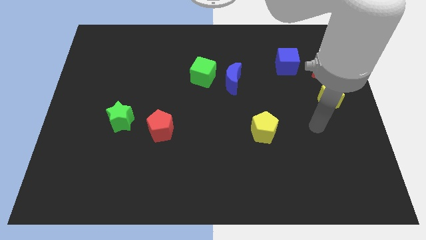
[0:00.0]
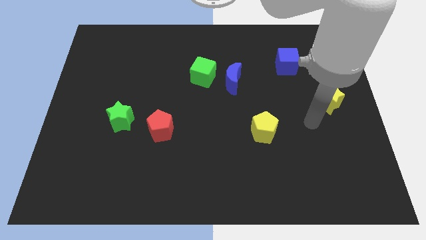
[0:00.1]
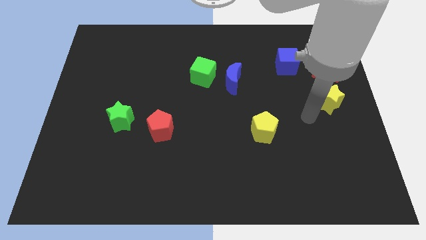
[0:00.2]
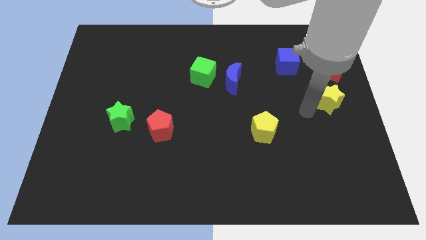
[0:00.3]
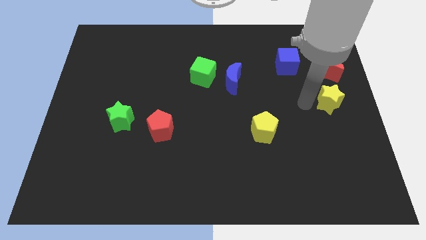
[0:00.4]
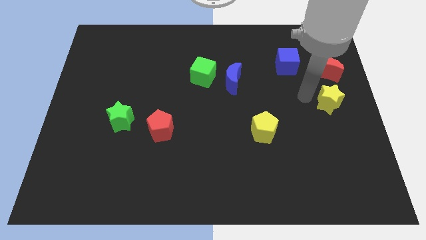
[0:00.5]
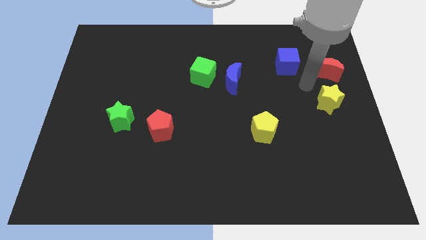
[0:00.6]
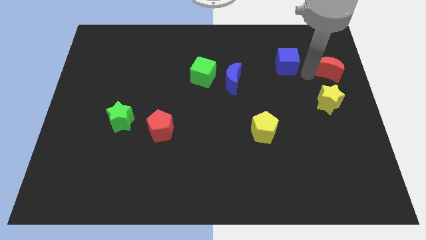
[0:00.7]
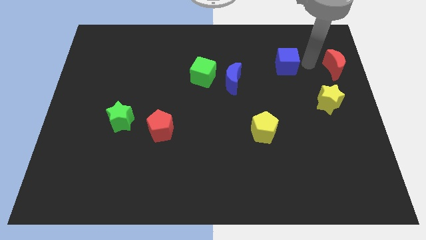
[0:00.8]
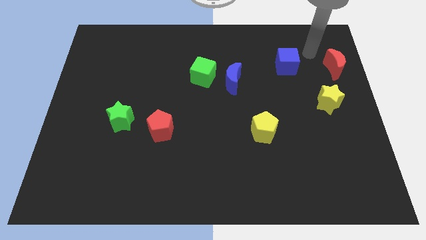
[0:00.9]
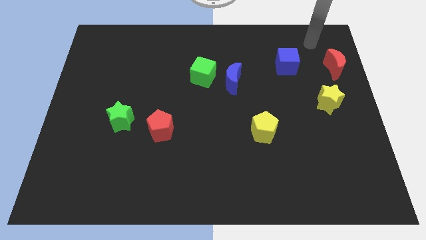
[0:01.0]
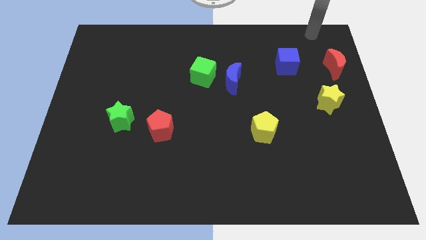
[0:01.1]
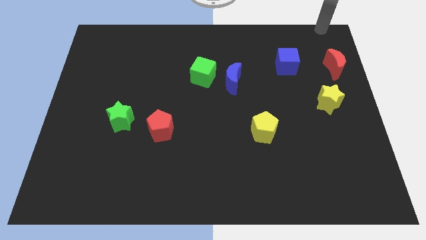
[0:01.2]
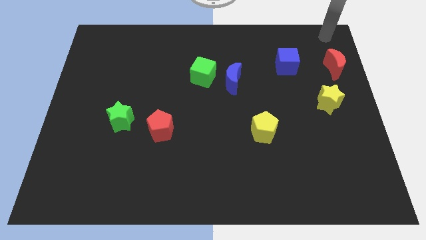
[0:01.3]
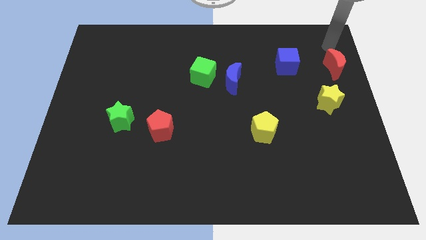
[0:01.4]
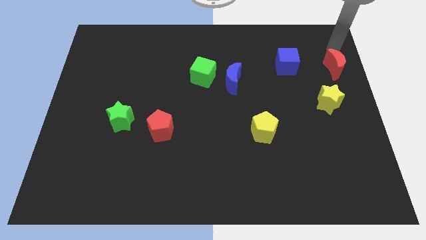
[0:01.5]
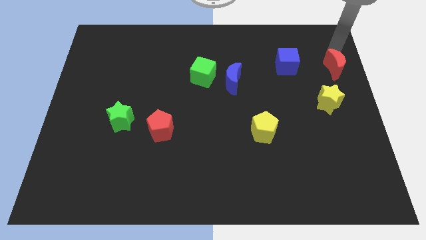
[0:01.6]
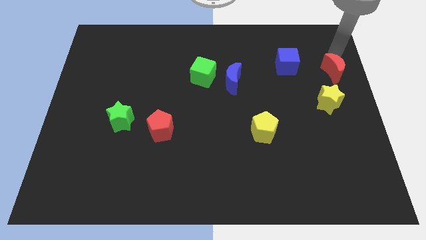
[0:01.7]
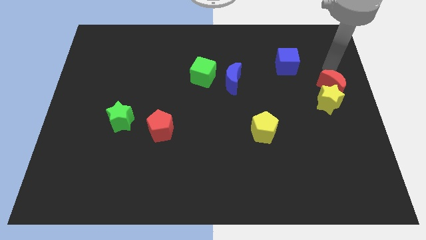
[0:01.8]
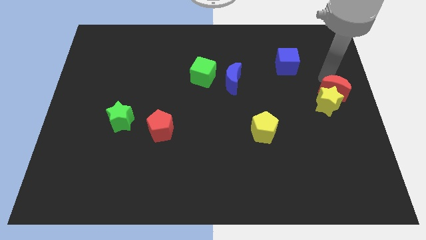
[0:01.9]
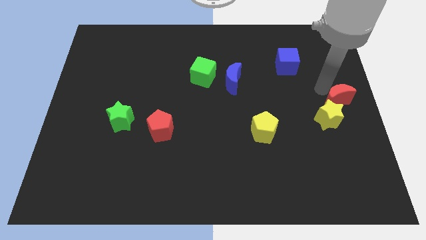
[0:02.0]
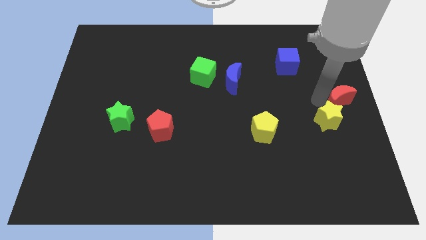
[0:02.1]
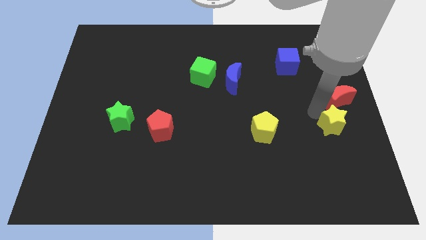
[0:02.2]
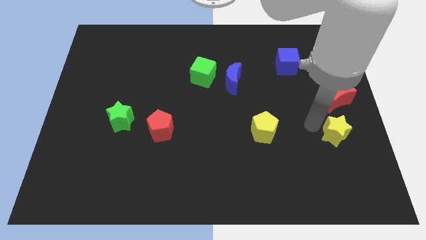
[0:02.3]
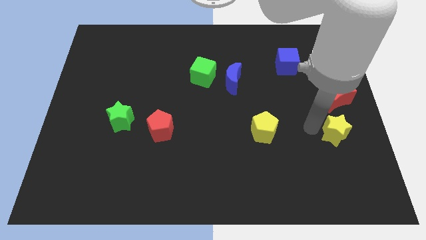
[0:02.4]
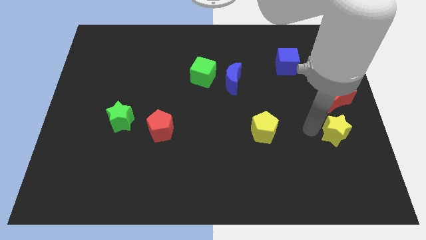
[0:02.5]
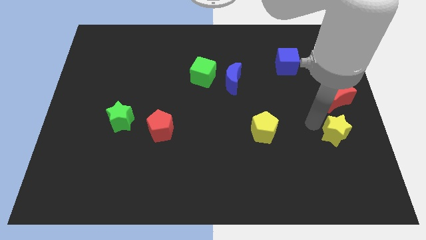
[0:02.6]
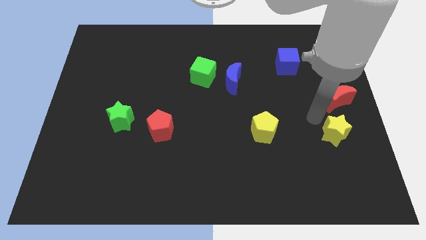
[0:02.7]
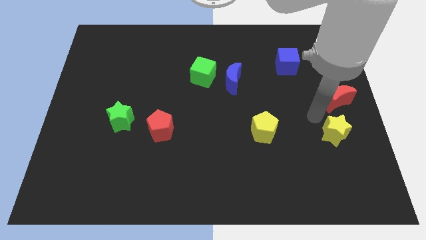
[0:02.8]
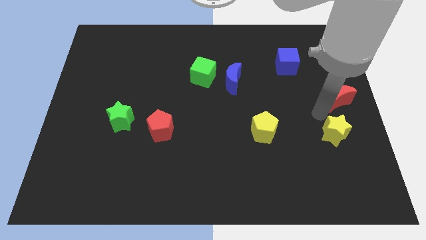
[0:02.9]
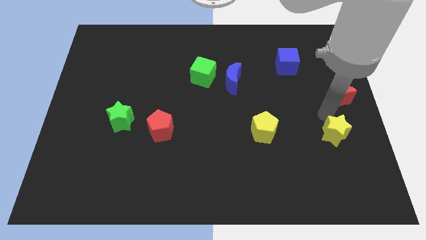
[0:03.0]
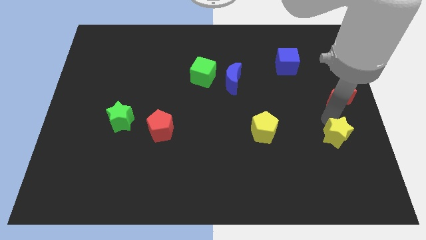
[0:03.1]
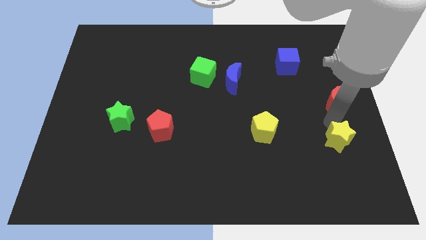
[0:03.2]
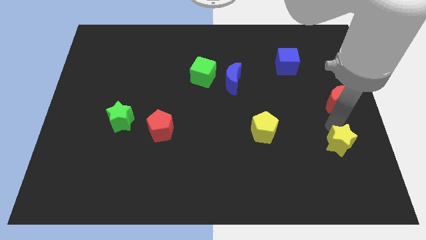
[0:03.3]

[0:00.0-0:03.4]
place the yellow star right to the yellow pentagon

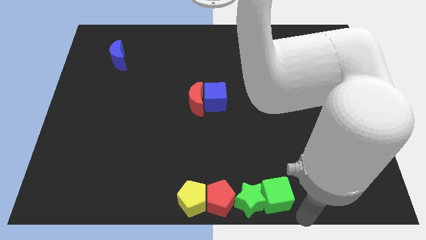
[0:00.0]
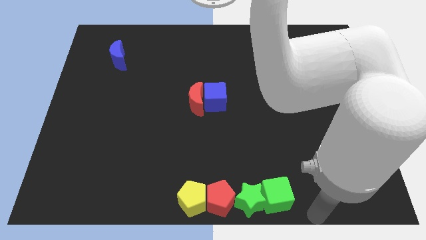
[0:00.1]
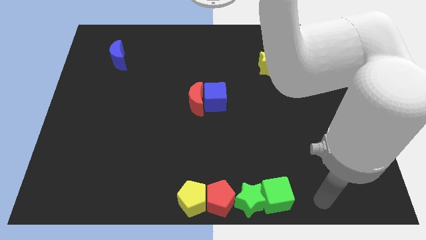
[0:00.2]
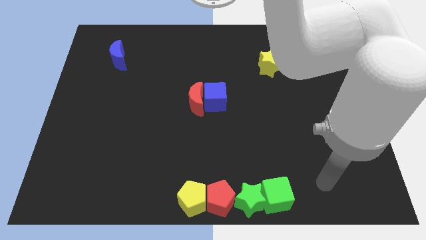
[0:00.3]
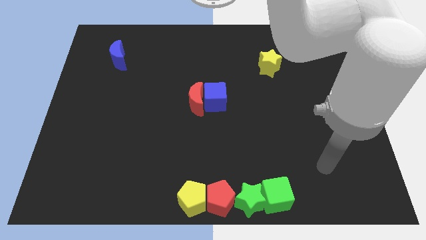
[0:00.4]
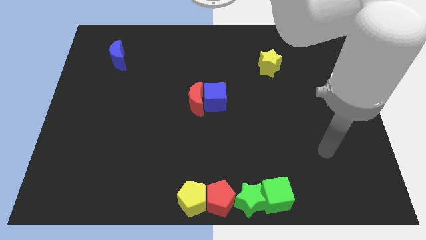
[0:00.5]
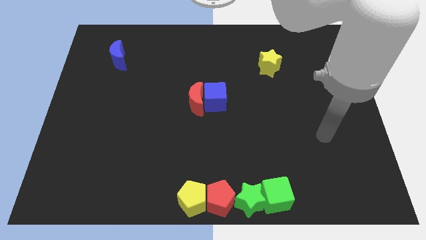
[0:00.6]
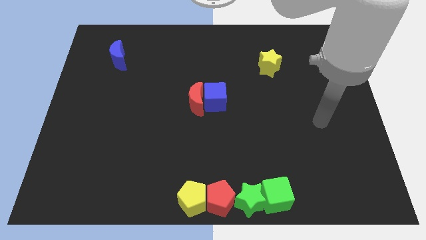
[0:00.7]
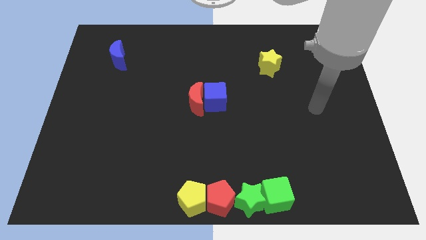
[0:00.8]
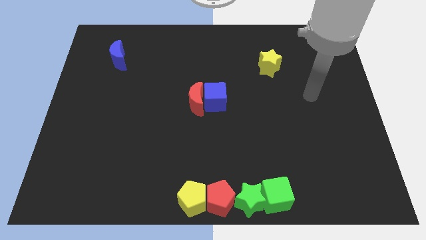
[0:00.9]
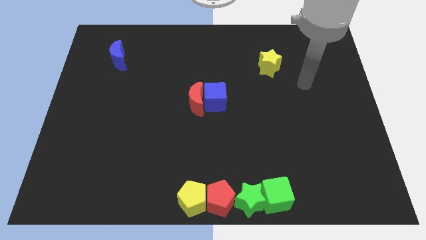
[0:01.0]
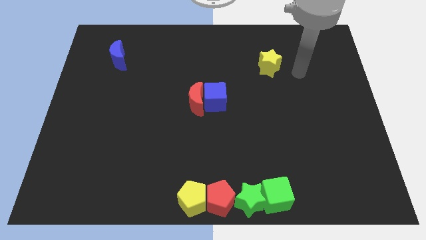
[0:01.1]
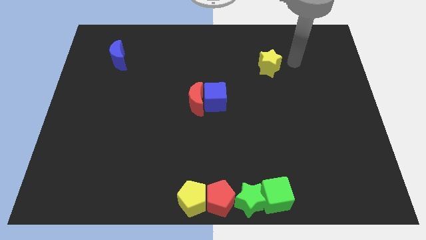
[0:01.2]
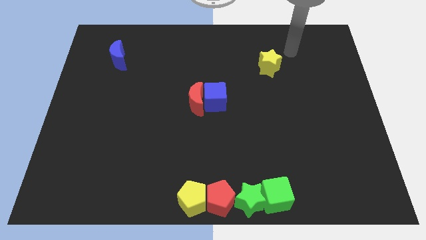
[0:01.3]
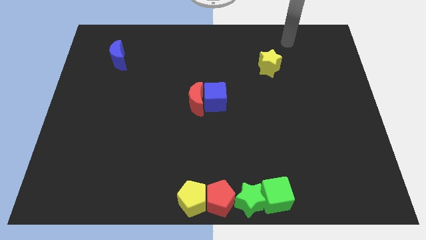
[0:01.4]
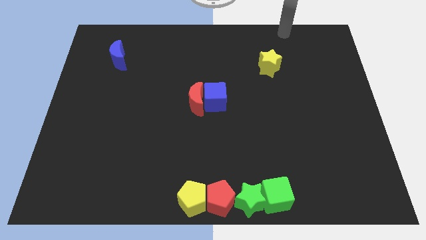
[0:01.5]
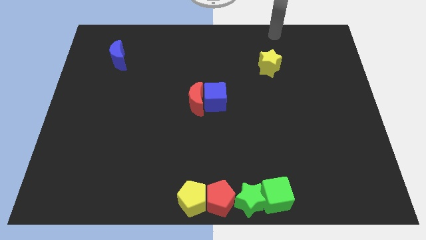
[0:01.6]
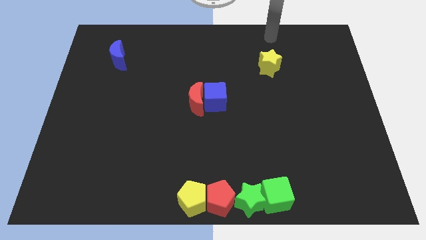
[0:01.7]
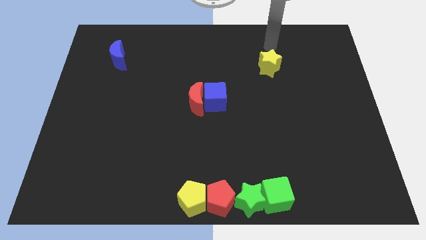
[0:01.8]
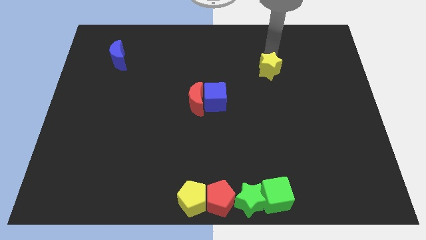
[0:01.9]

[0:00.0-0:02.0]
move your arm away from the green cube

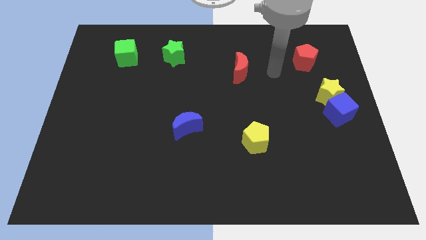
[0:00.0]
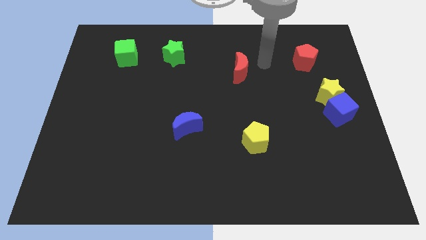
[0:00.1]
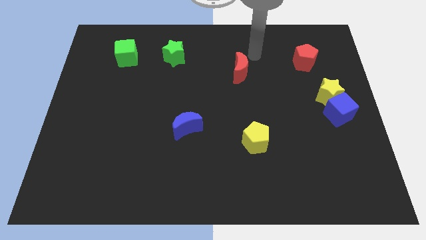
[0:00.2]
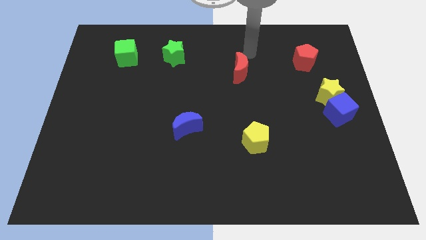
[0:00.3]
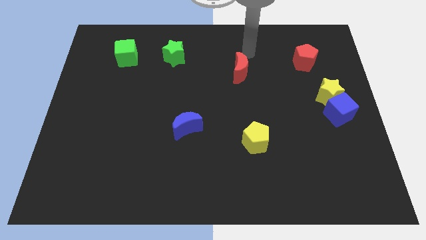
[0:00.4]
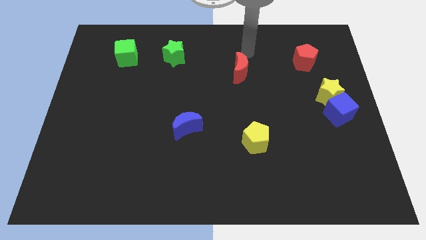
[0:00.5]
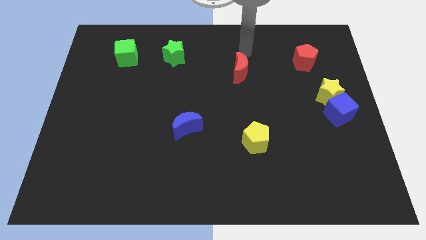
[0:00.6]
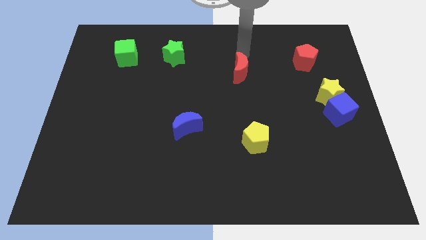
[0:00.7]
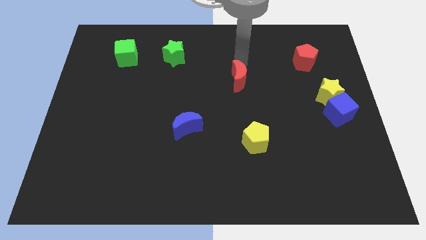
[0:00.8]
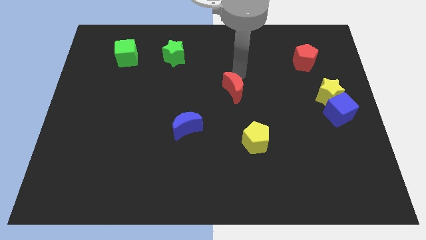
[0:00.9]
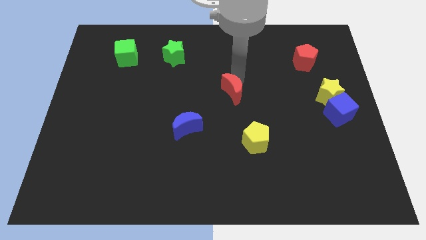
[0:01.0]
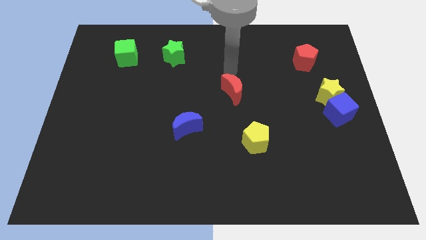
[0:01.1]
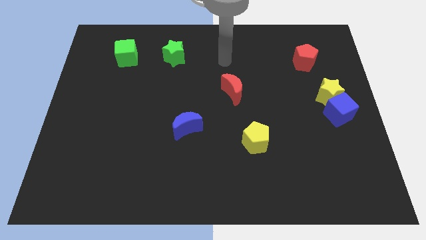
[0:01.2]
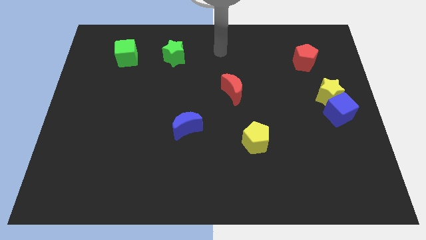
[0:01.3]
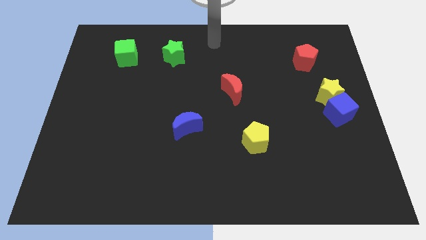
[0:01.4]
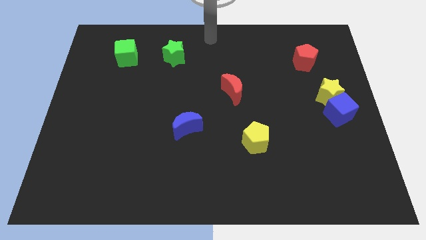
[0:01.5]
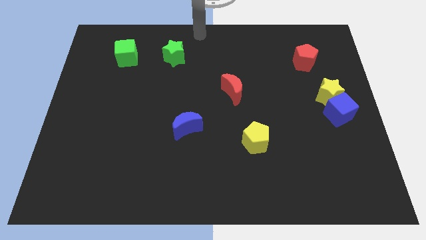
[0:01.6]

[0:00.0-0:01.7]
move the red moon to the center of the board

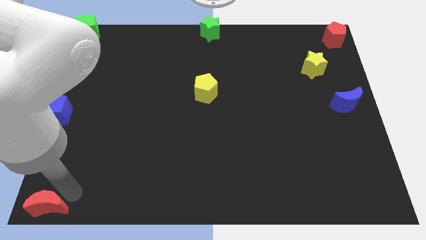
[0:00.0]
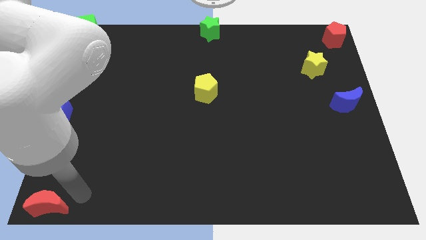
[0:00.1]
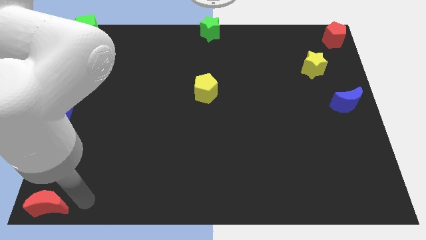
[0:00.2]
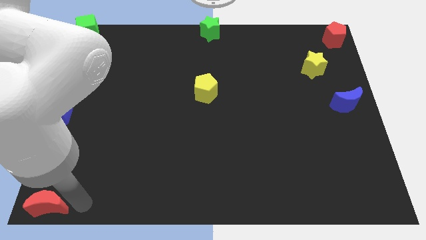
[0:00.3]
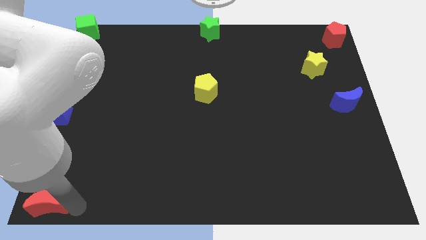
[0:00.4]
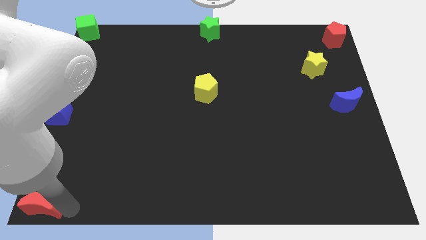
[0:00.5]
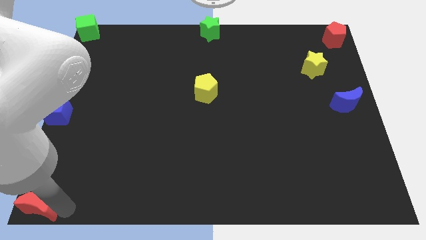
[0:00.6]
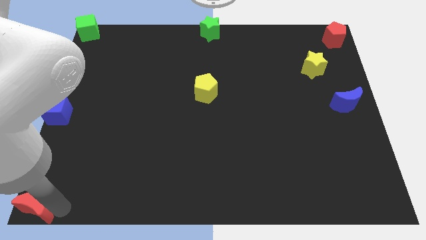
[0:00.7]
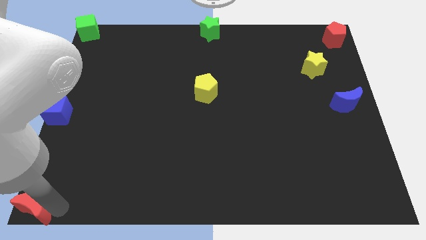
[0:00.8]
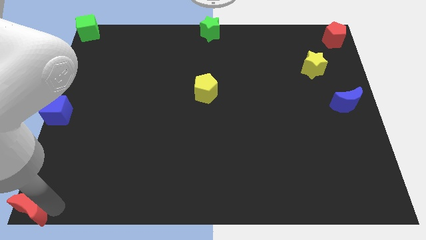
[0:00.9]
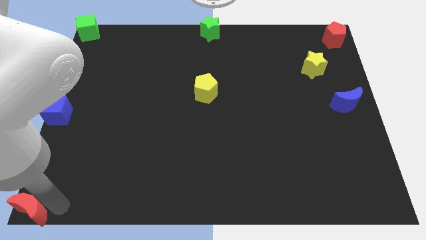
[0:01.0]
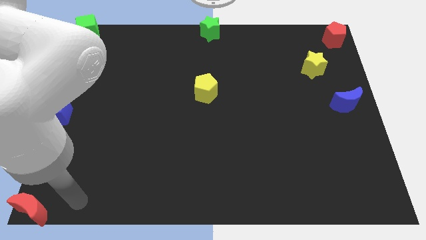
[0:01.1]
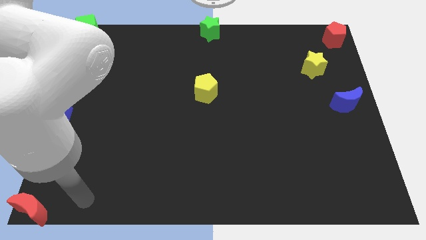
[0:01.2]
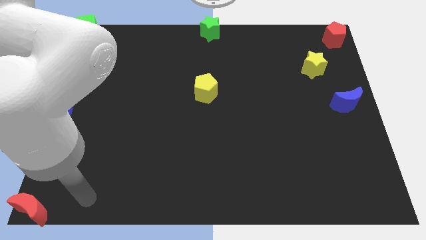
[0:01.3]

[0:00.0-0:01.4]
place red crescent towards bottom left corener

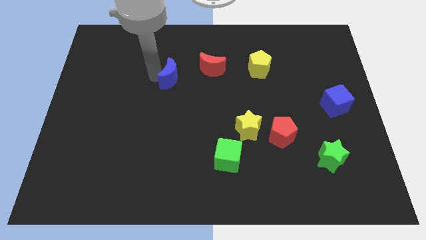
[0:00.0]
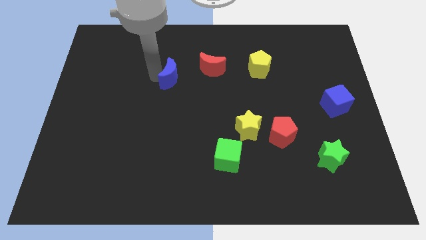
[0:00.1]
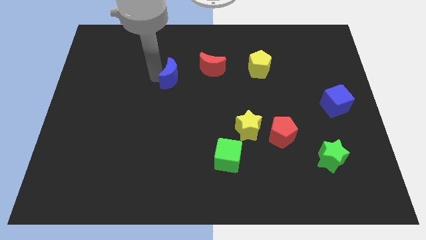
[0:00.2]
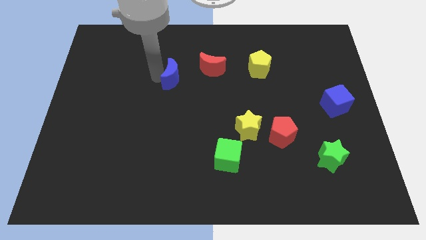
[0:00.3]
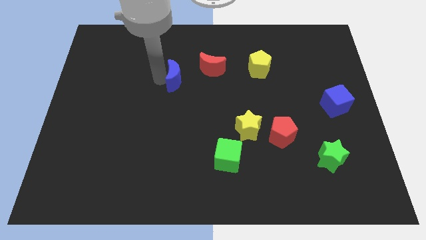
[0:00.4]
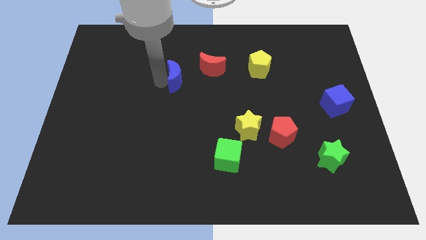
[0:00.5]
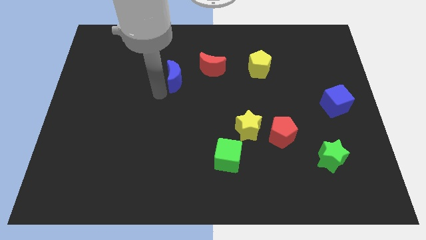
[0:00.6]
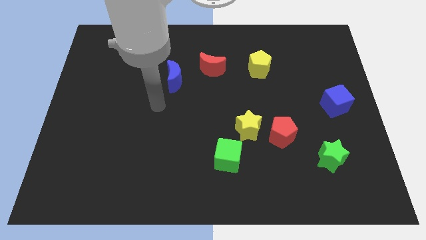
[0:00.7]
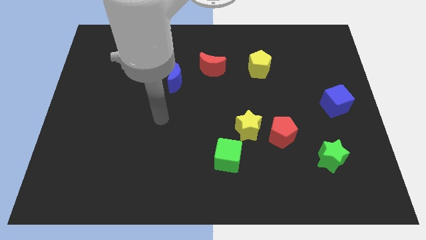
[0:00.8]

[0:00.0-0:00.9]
move the blue crescent slightly to the right
